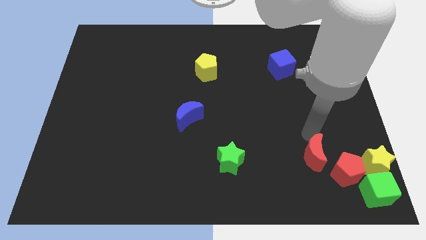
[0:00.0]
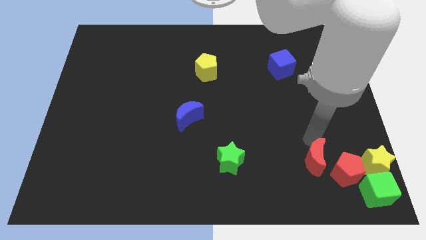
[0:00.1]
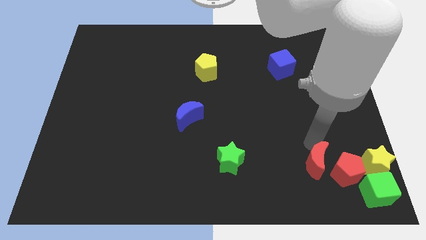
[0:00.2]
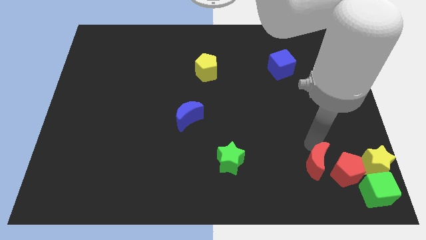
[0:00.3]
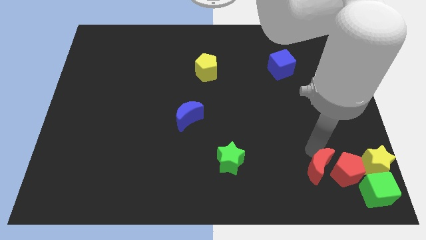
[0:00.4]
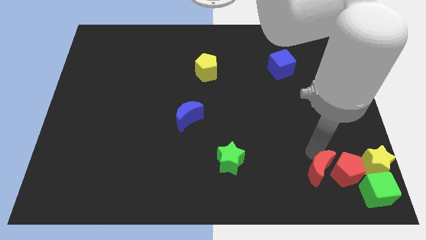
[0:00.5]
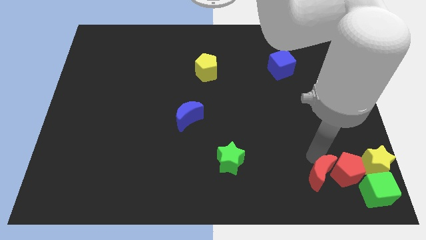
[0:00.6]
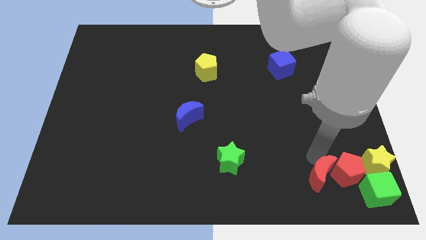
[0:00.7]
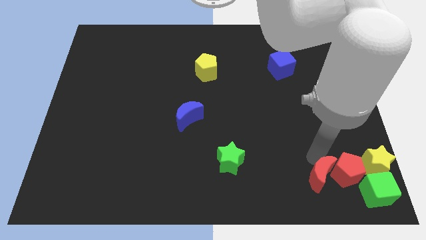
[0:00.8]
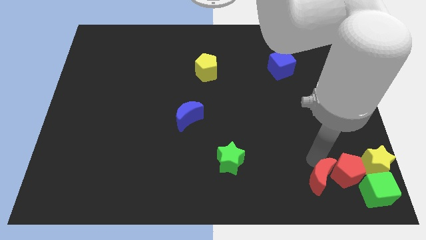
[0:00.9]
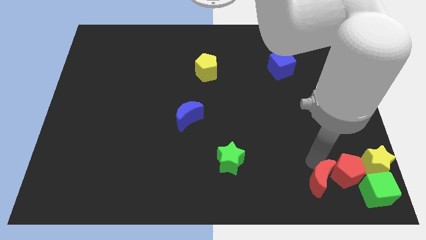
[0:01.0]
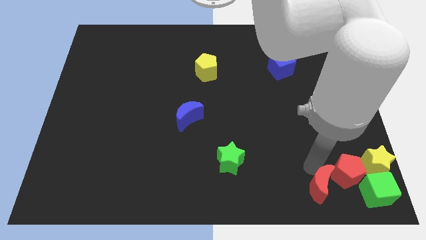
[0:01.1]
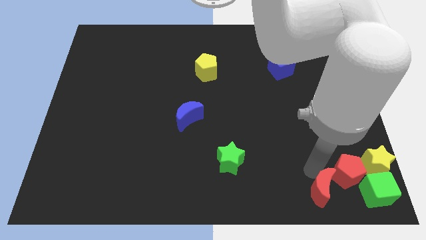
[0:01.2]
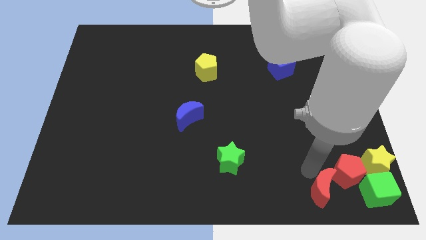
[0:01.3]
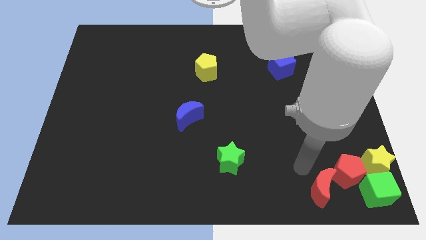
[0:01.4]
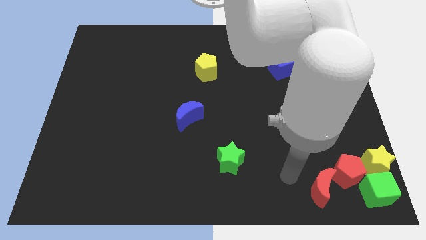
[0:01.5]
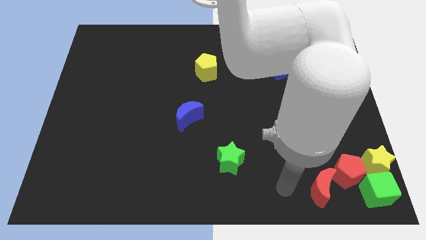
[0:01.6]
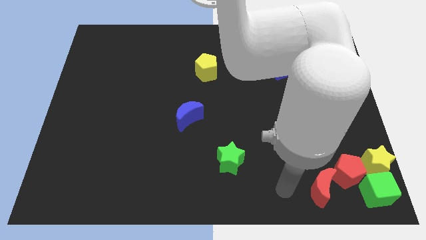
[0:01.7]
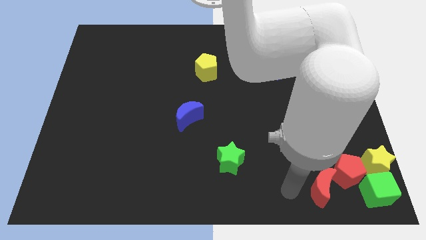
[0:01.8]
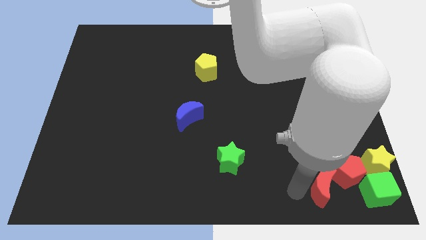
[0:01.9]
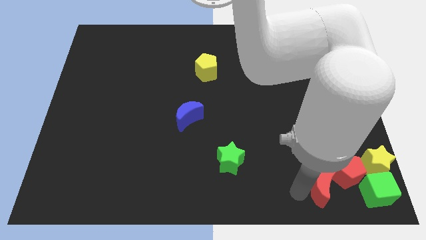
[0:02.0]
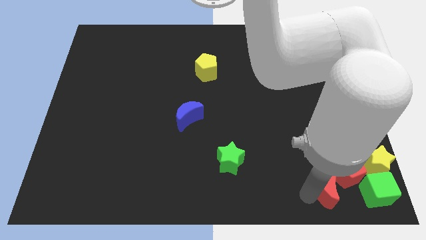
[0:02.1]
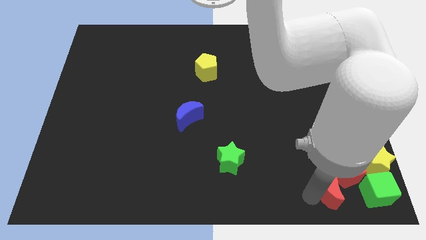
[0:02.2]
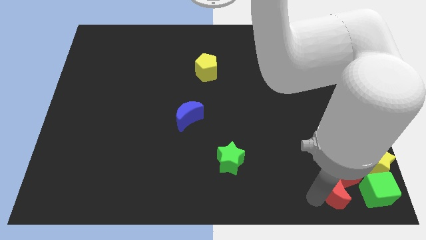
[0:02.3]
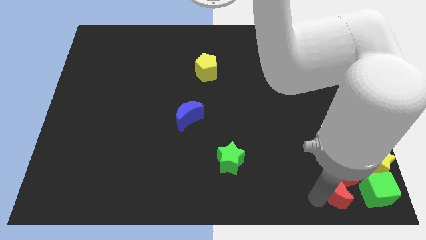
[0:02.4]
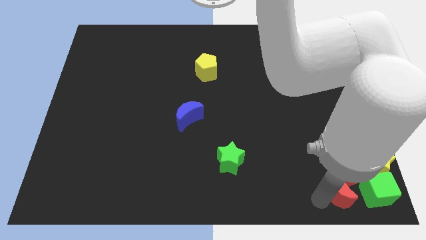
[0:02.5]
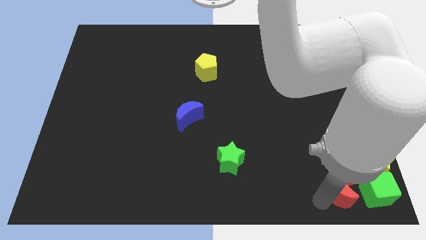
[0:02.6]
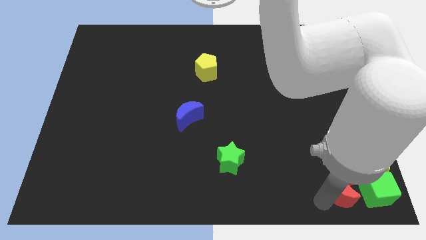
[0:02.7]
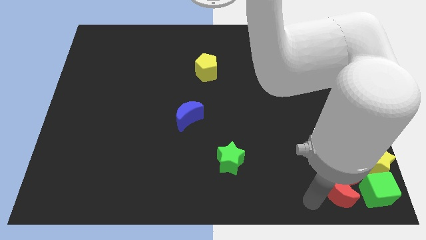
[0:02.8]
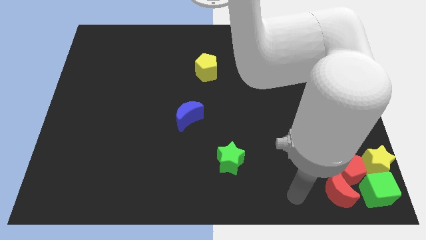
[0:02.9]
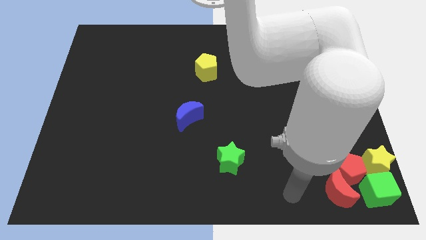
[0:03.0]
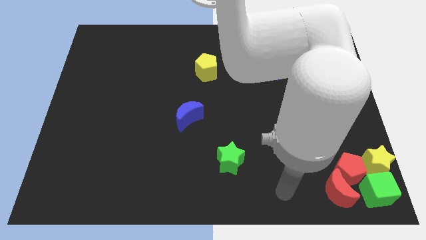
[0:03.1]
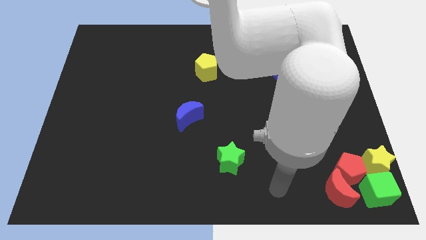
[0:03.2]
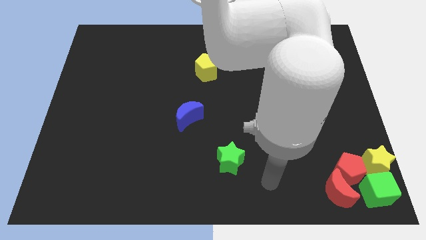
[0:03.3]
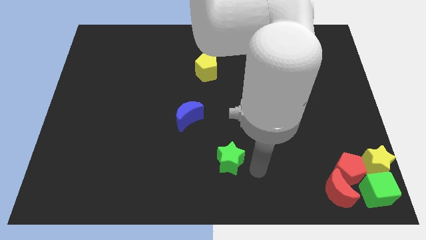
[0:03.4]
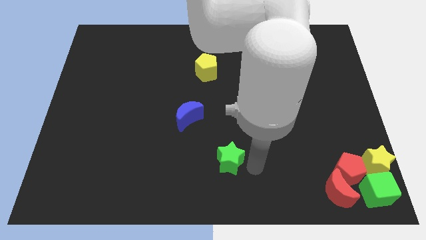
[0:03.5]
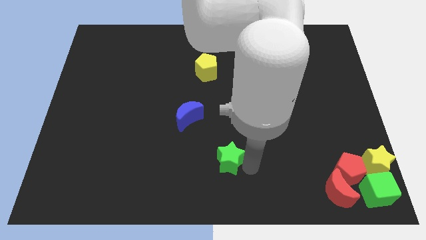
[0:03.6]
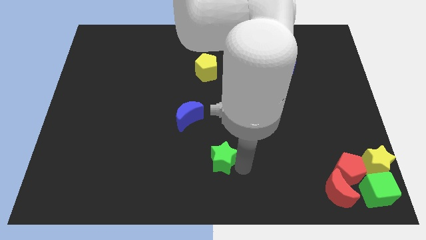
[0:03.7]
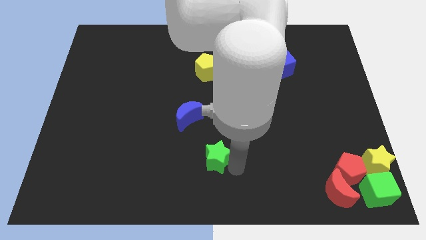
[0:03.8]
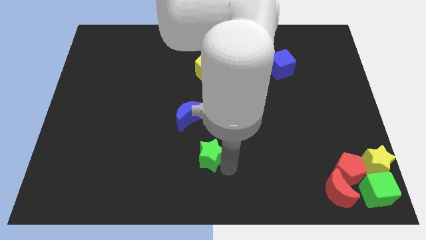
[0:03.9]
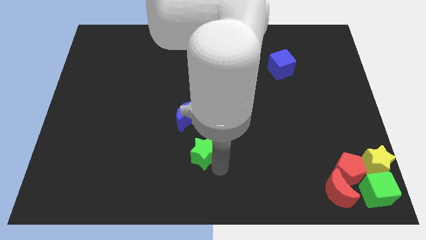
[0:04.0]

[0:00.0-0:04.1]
push the red crescent into the red pentagon

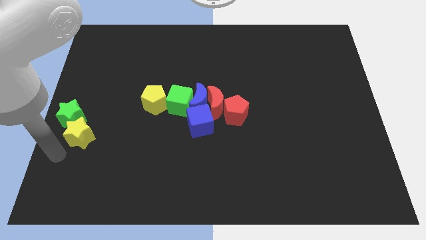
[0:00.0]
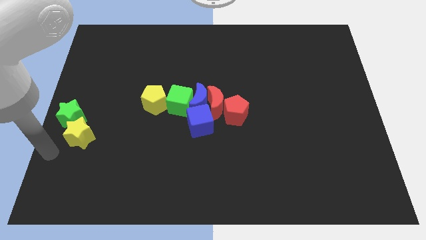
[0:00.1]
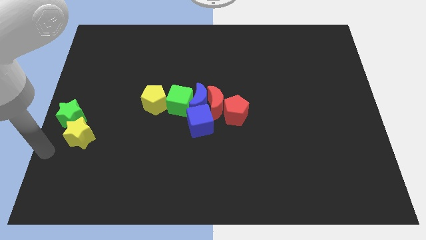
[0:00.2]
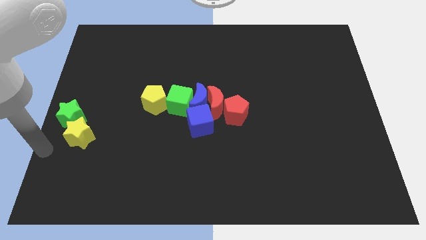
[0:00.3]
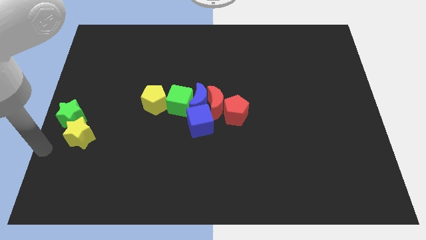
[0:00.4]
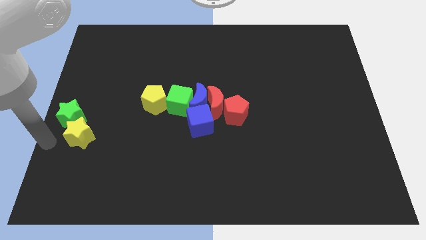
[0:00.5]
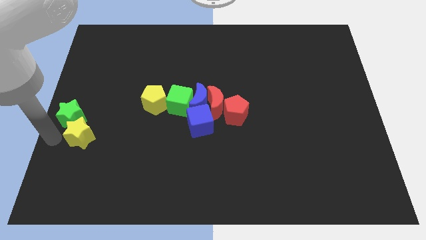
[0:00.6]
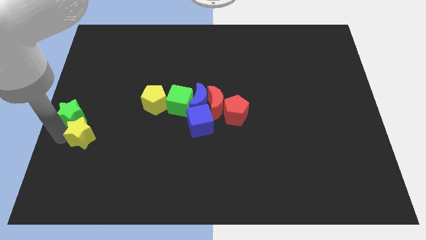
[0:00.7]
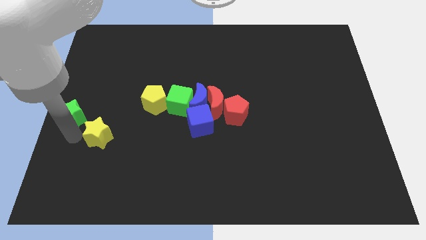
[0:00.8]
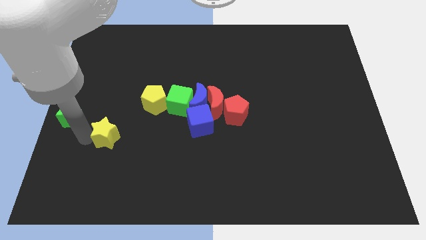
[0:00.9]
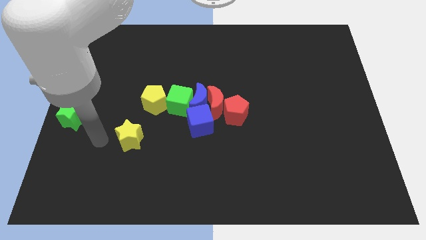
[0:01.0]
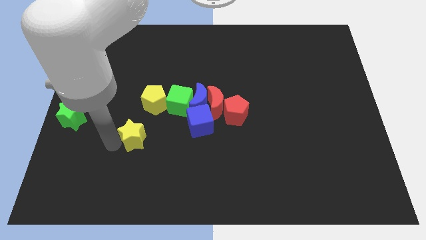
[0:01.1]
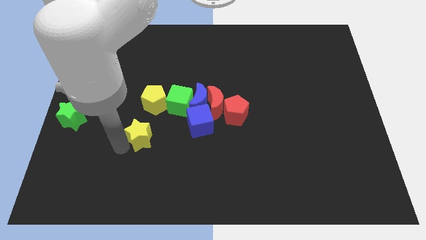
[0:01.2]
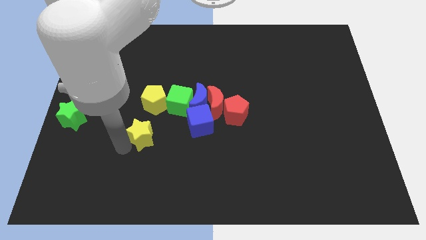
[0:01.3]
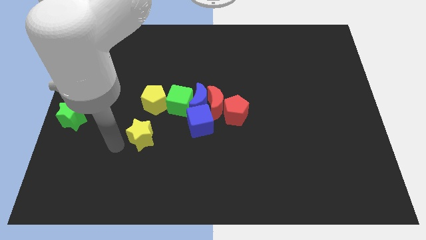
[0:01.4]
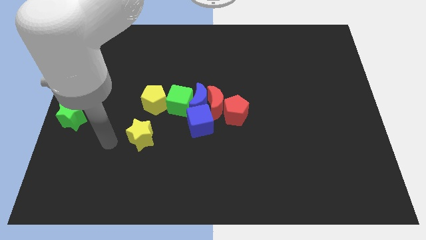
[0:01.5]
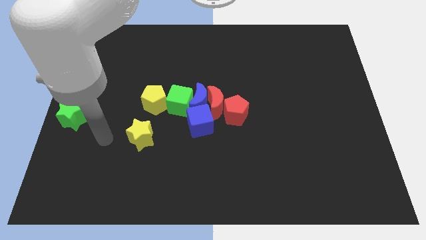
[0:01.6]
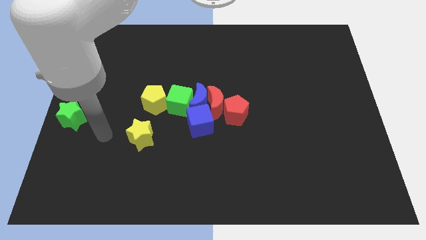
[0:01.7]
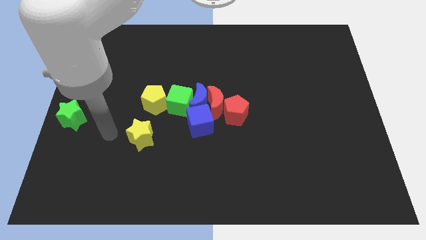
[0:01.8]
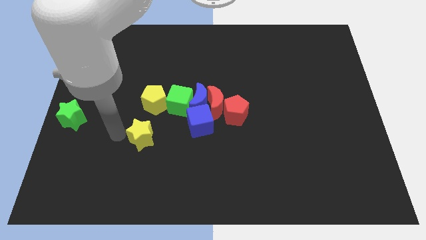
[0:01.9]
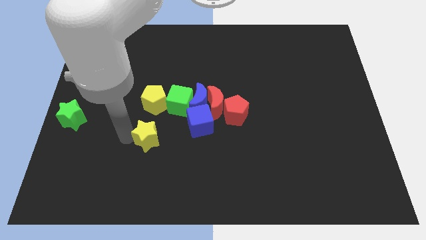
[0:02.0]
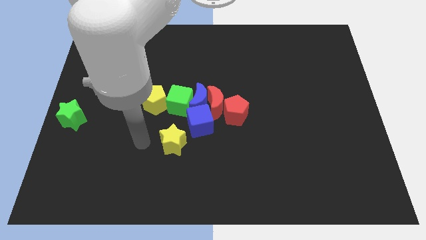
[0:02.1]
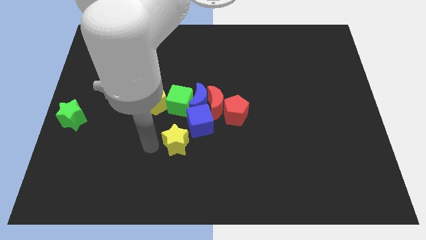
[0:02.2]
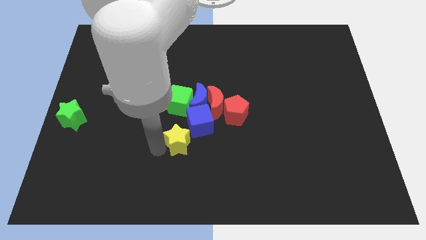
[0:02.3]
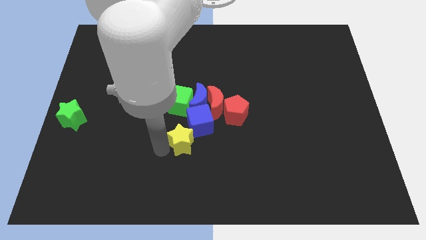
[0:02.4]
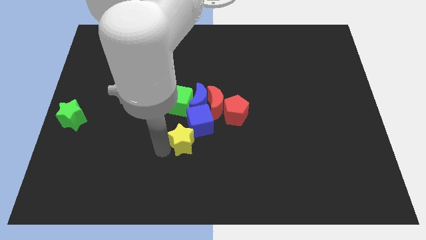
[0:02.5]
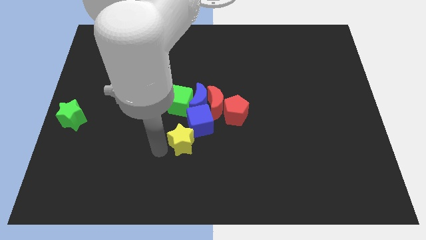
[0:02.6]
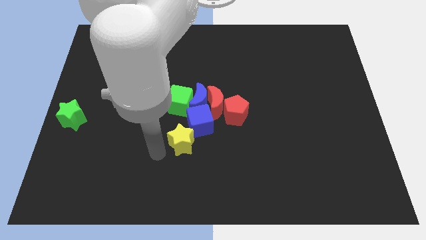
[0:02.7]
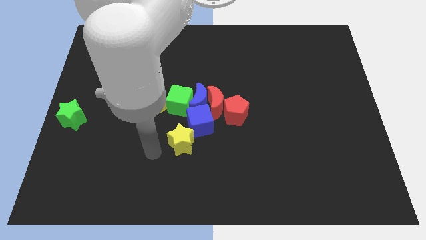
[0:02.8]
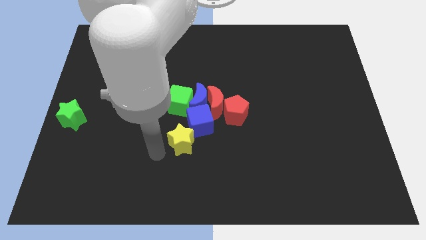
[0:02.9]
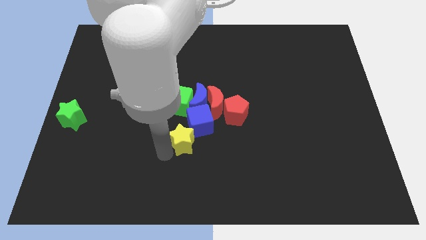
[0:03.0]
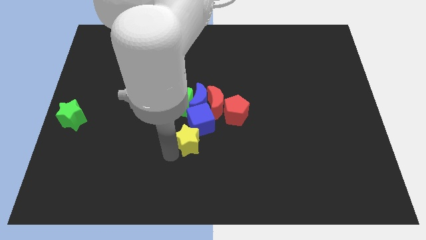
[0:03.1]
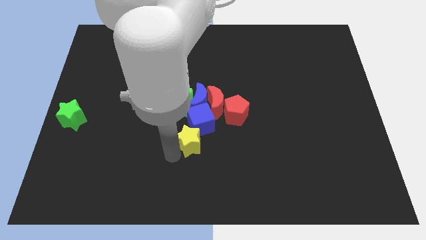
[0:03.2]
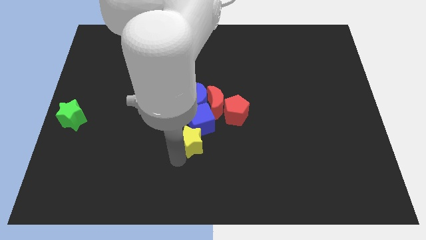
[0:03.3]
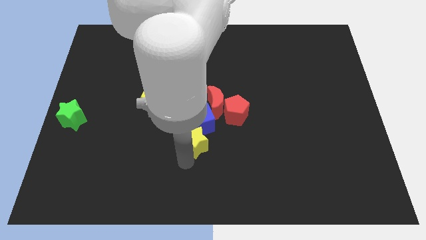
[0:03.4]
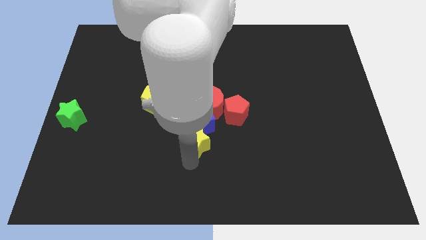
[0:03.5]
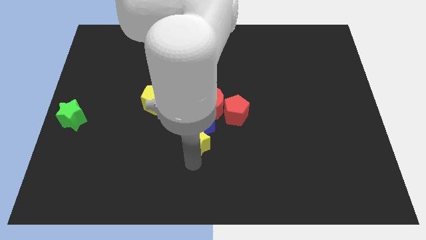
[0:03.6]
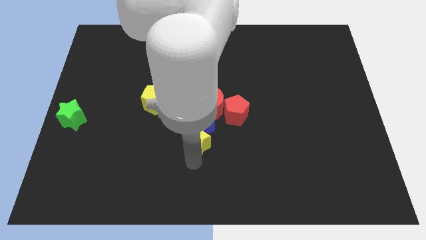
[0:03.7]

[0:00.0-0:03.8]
place yellow star to the bottom of blue cube

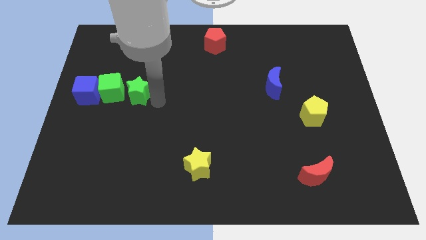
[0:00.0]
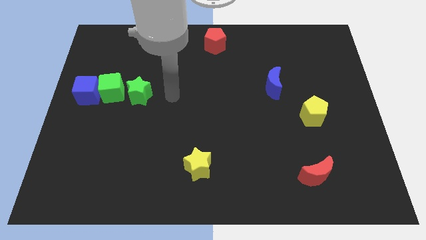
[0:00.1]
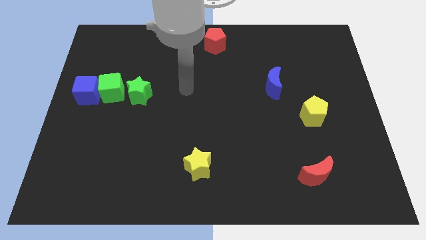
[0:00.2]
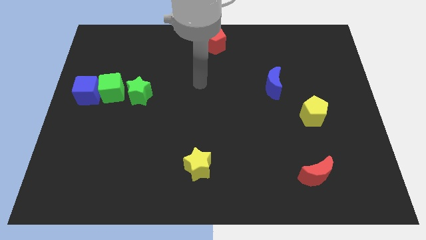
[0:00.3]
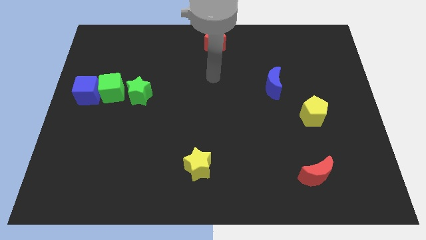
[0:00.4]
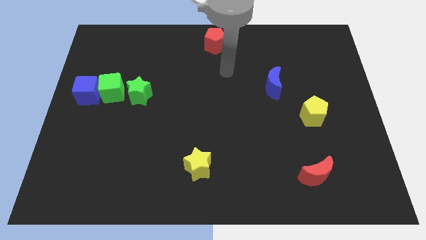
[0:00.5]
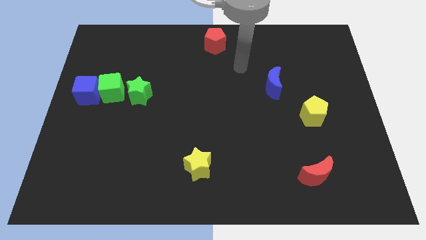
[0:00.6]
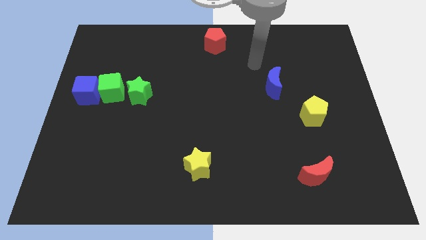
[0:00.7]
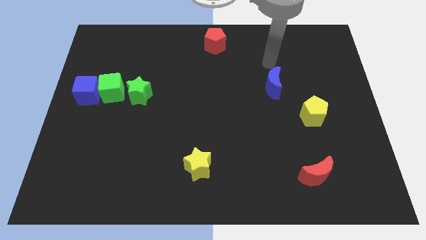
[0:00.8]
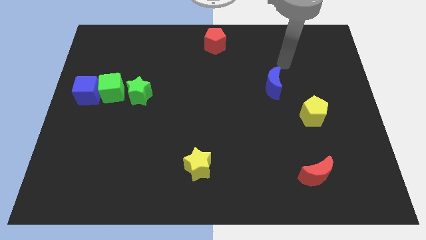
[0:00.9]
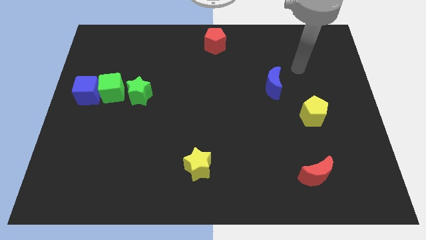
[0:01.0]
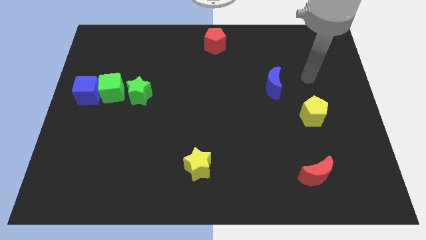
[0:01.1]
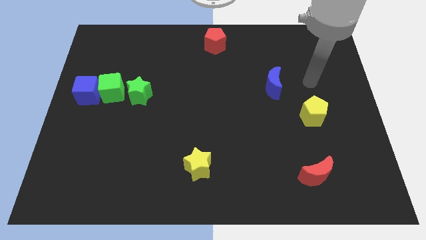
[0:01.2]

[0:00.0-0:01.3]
point your arm at the top of the yellow pentagon
